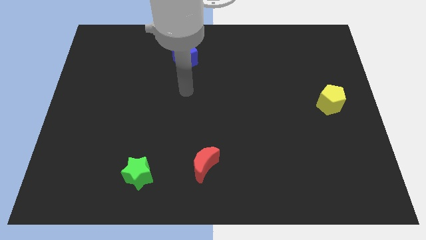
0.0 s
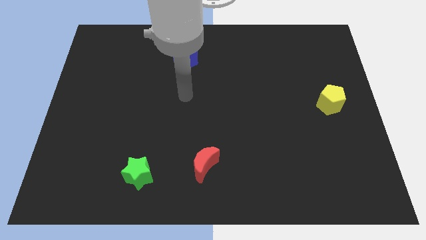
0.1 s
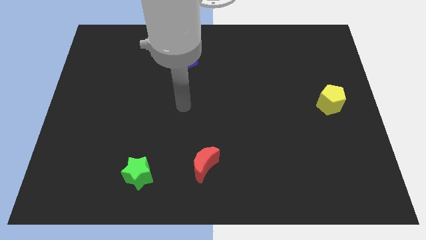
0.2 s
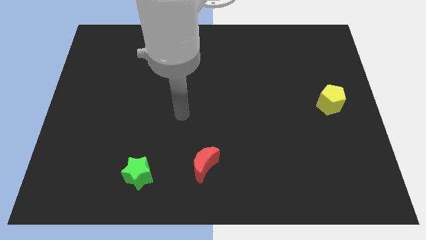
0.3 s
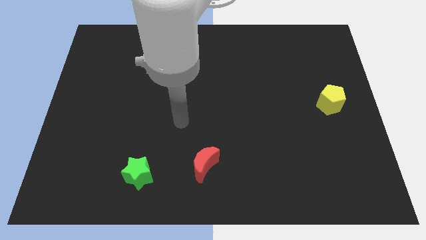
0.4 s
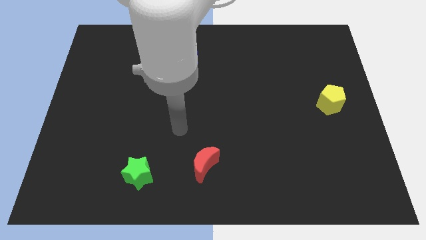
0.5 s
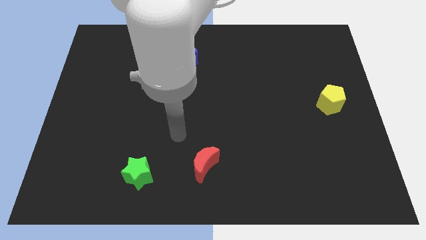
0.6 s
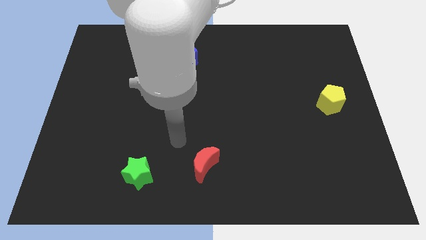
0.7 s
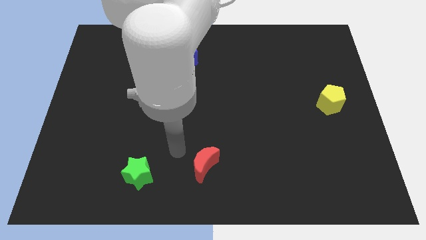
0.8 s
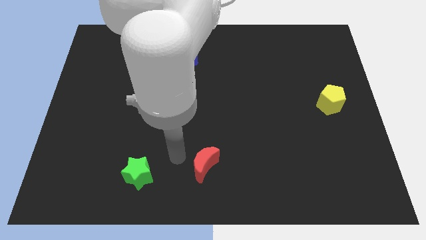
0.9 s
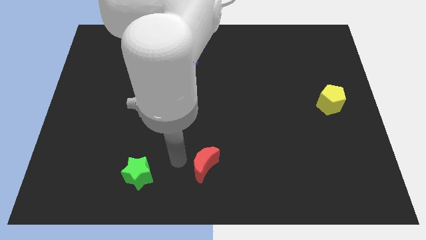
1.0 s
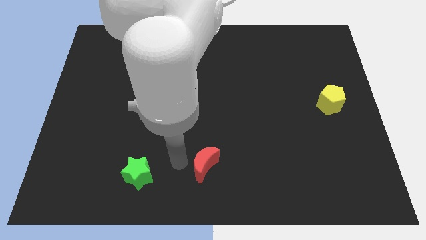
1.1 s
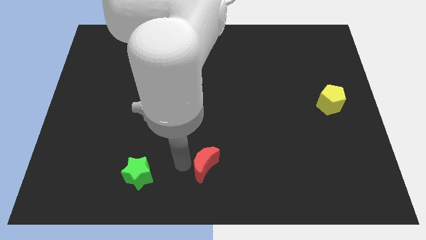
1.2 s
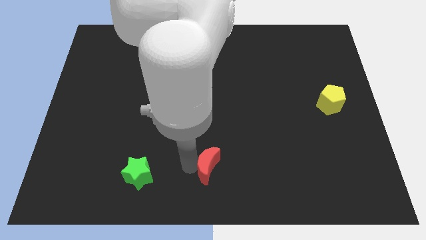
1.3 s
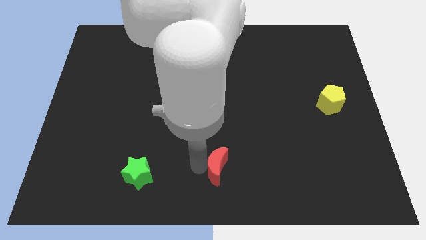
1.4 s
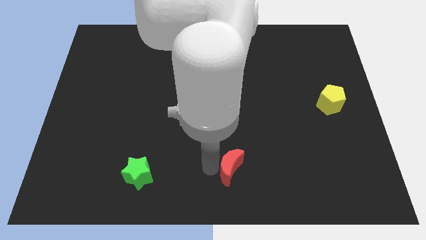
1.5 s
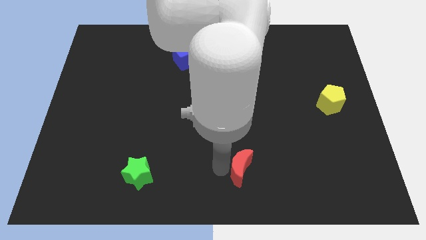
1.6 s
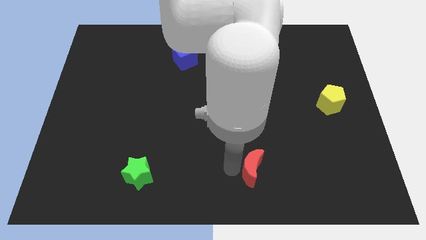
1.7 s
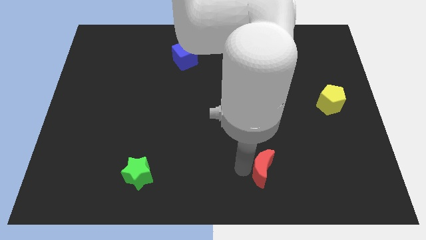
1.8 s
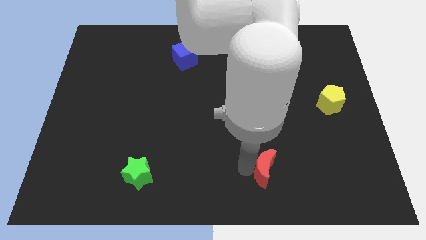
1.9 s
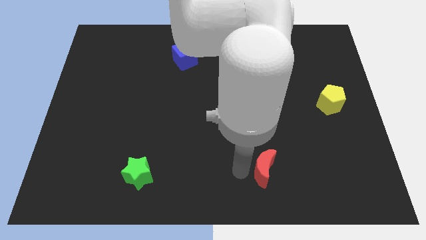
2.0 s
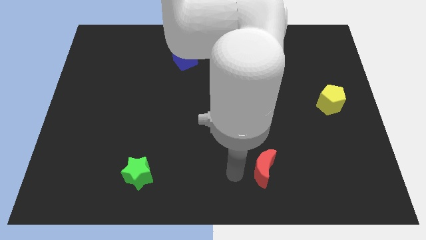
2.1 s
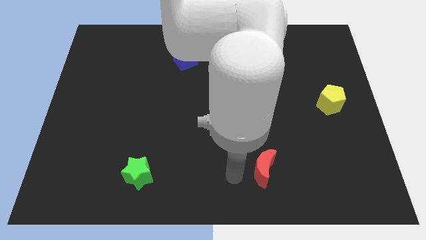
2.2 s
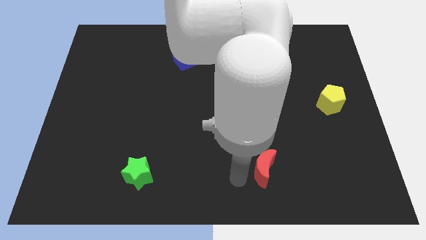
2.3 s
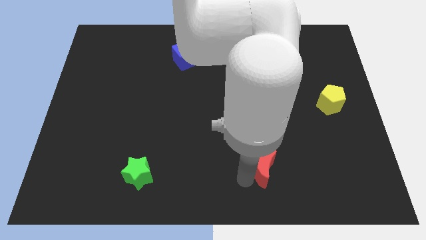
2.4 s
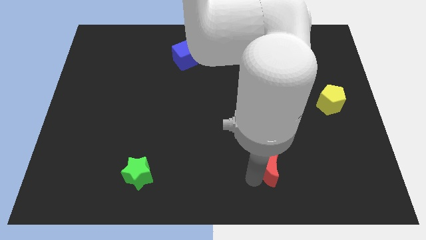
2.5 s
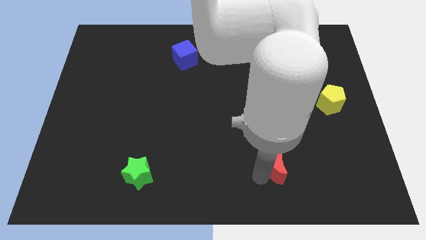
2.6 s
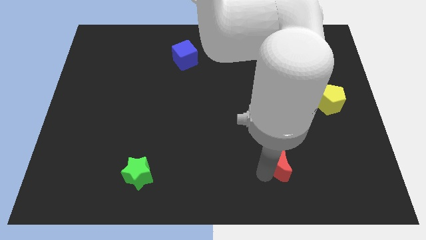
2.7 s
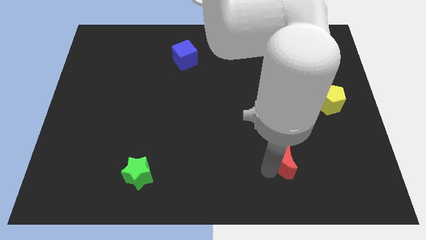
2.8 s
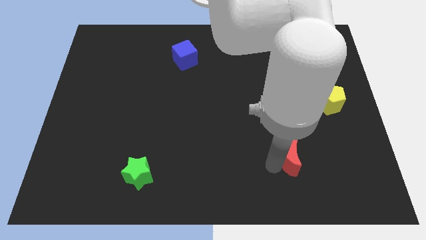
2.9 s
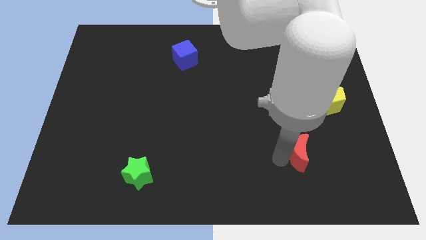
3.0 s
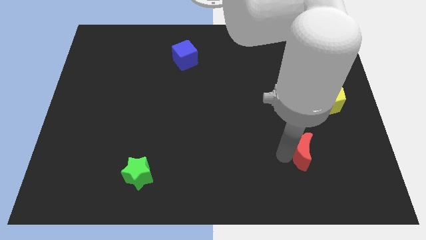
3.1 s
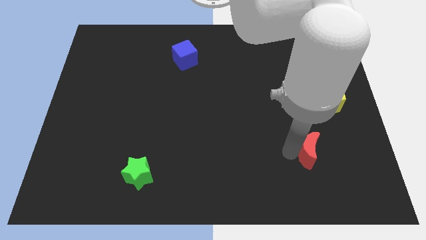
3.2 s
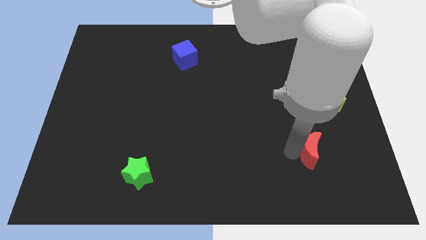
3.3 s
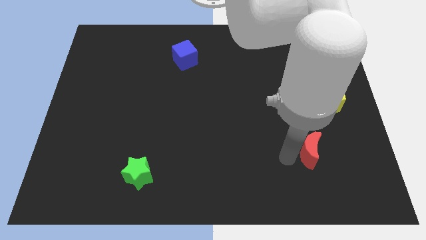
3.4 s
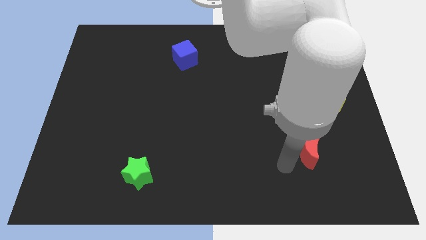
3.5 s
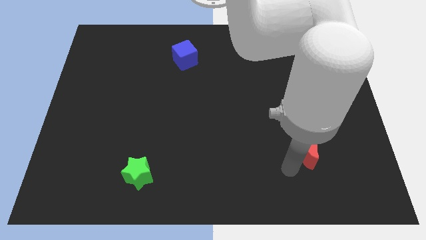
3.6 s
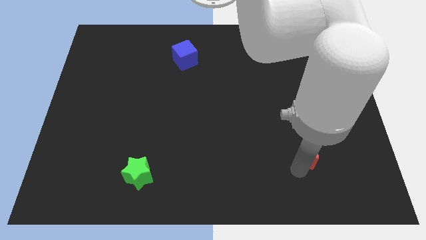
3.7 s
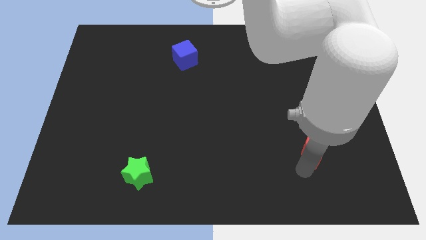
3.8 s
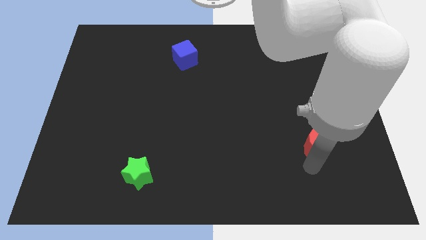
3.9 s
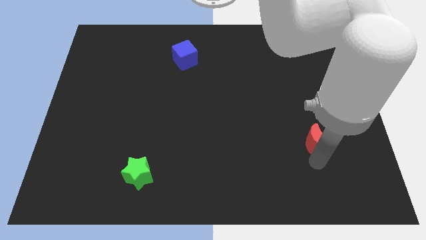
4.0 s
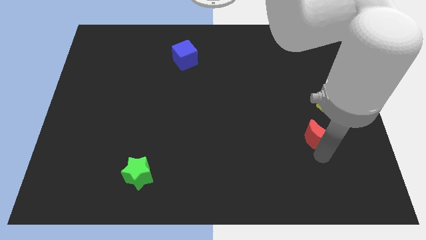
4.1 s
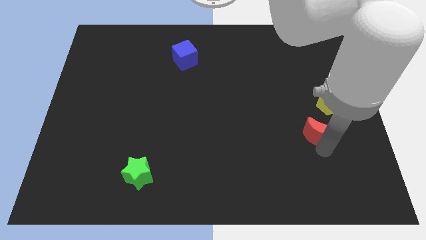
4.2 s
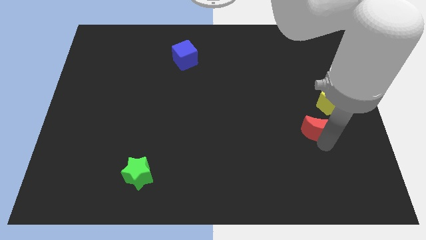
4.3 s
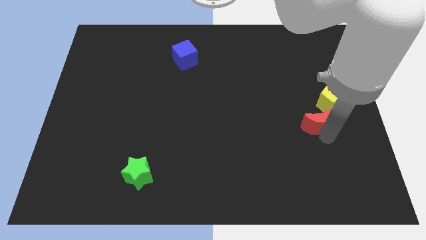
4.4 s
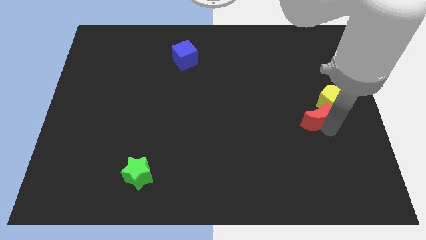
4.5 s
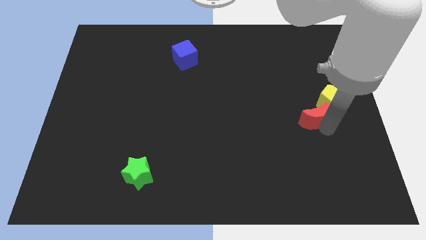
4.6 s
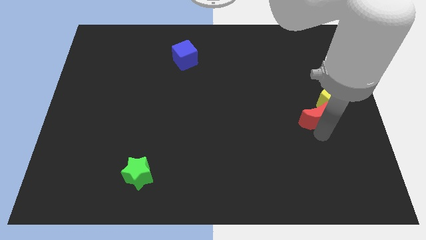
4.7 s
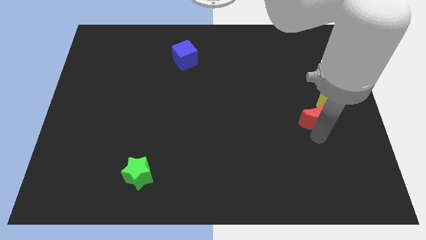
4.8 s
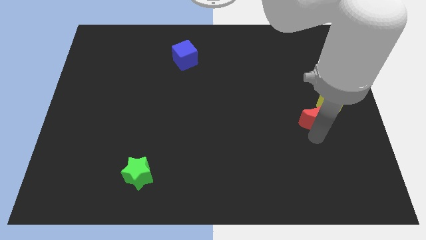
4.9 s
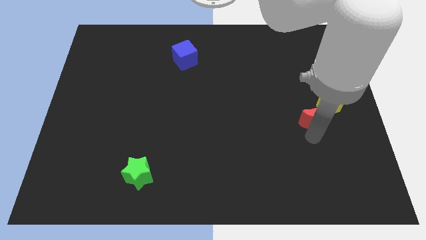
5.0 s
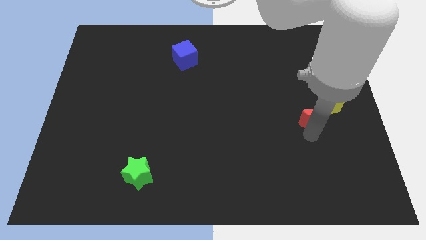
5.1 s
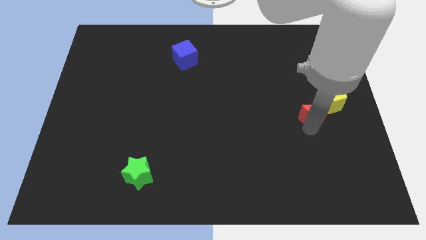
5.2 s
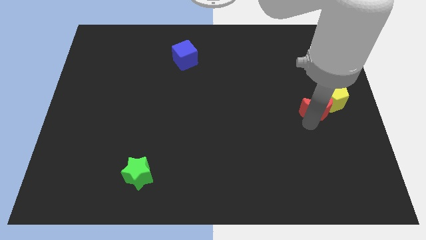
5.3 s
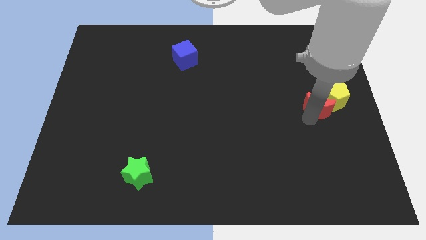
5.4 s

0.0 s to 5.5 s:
slide the red moon close to the yellow pentagon

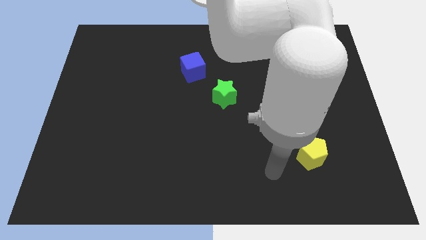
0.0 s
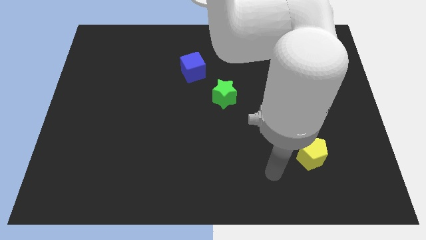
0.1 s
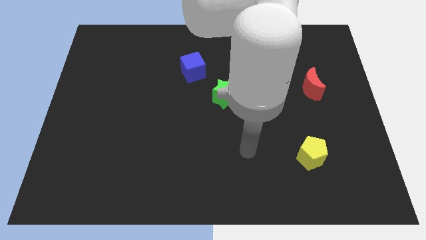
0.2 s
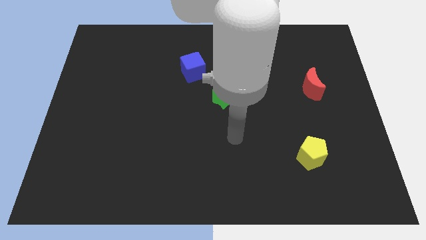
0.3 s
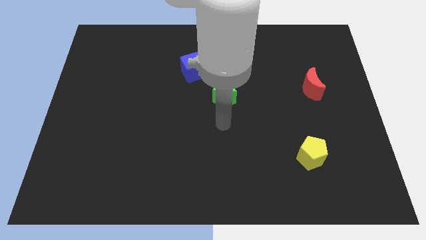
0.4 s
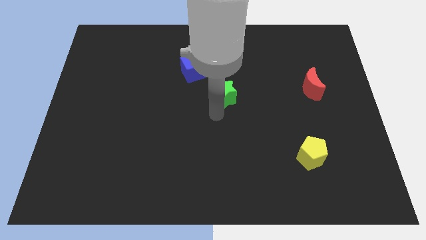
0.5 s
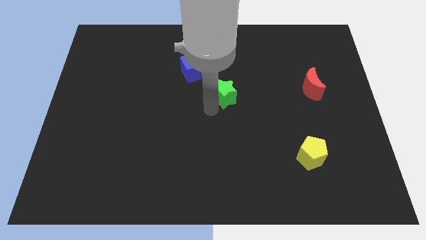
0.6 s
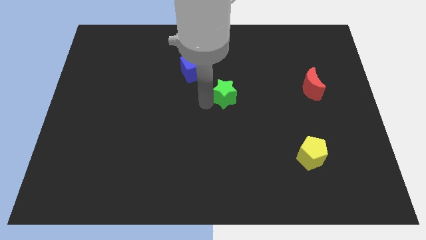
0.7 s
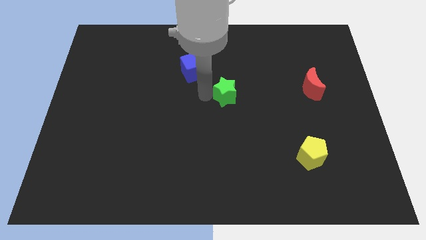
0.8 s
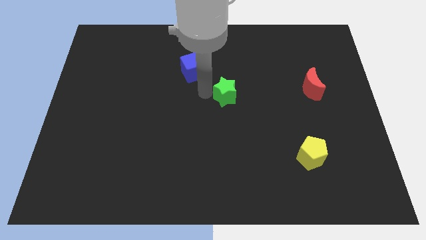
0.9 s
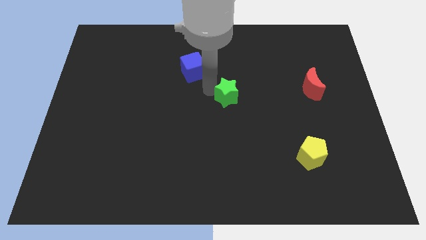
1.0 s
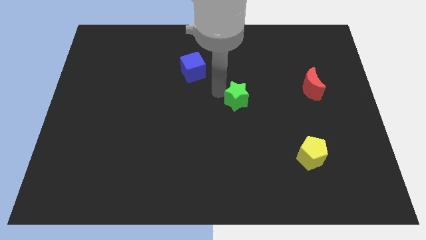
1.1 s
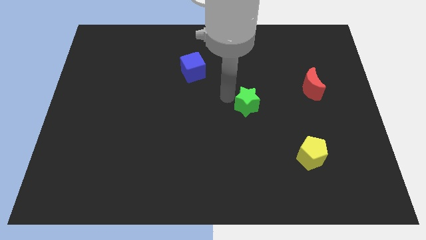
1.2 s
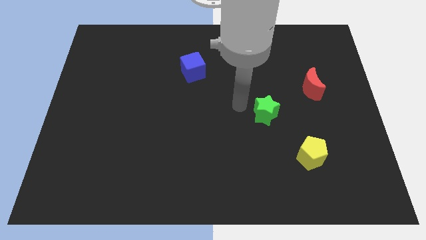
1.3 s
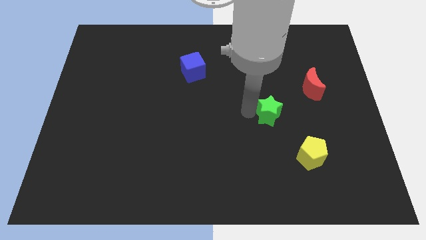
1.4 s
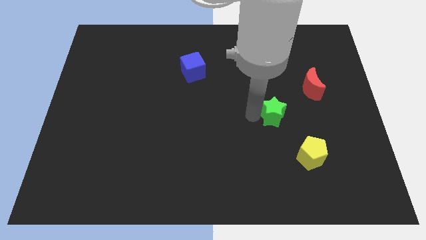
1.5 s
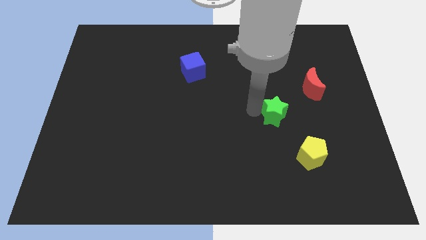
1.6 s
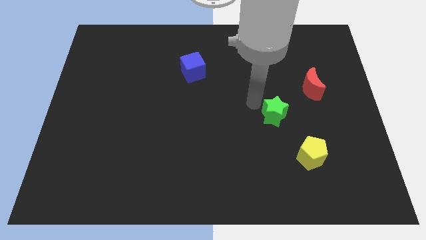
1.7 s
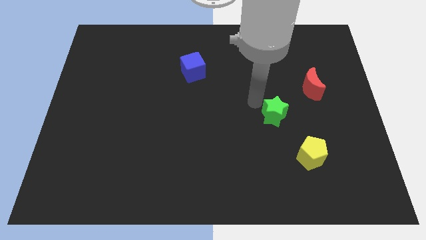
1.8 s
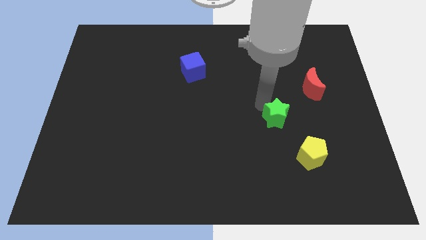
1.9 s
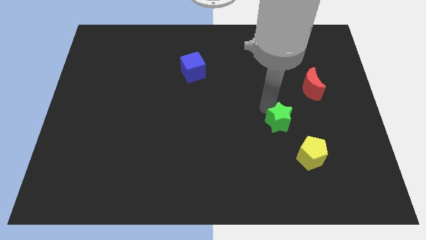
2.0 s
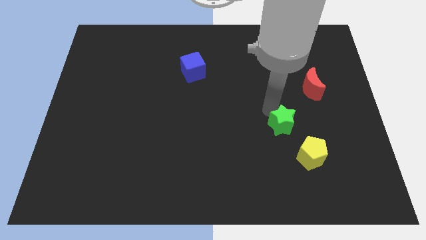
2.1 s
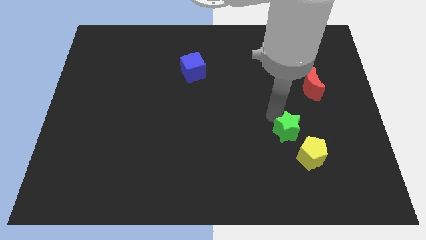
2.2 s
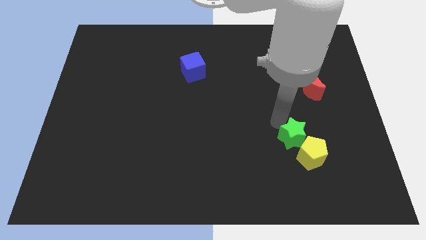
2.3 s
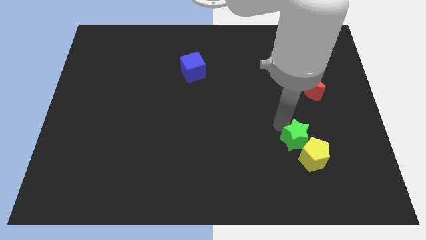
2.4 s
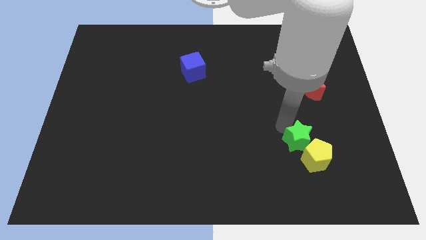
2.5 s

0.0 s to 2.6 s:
move the green block towards the yellow pentagon

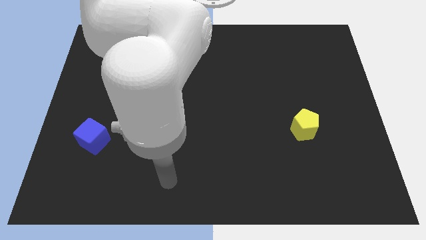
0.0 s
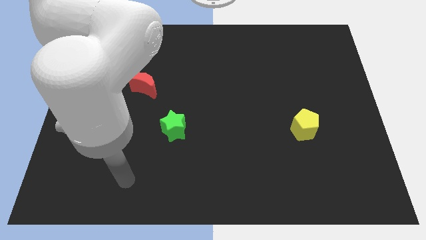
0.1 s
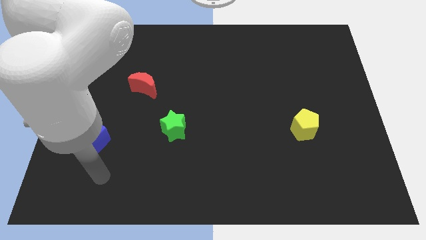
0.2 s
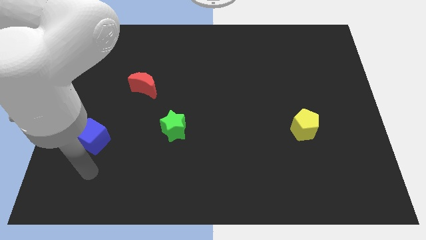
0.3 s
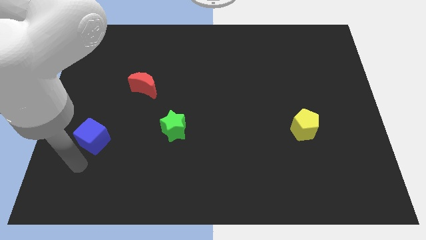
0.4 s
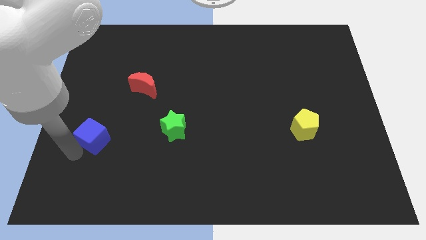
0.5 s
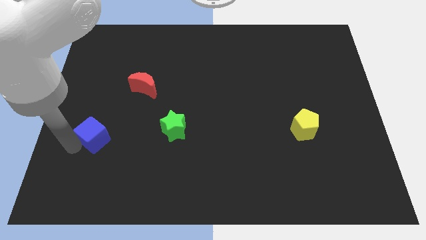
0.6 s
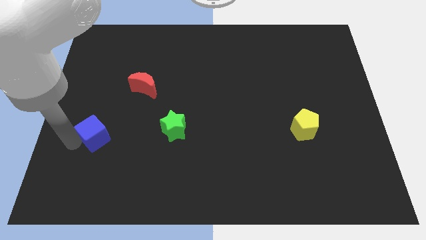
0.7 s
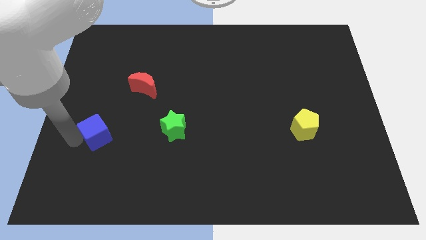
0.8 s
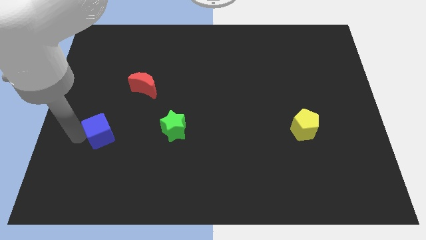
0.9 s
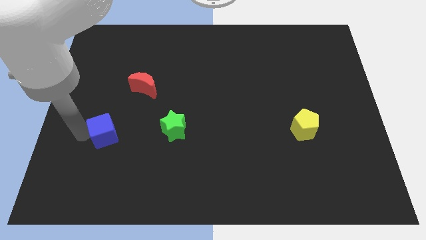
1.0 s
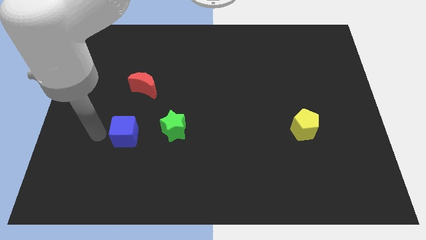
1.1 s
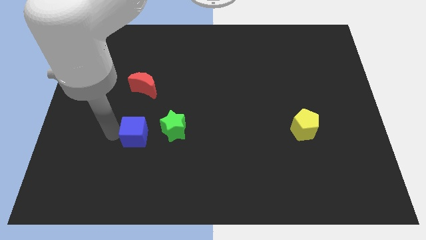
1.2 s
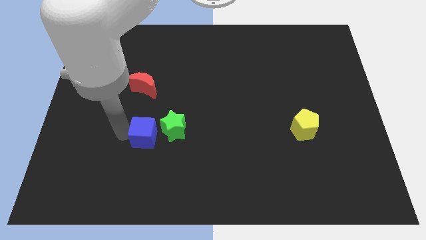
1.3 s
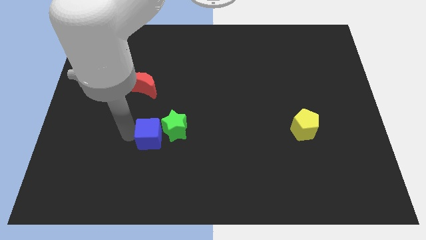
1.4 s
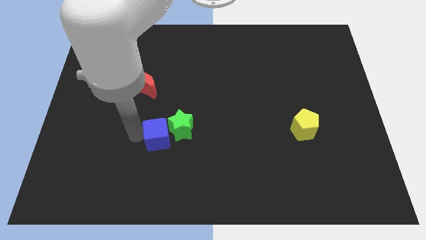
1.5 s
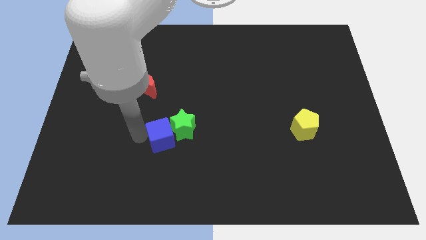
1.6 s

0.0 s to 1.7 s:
put the cube to the green block
